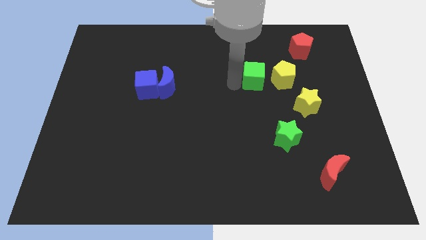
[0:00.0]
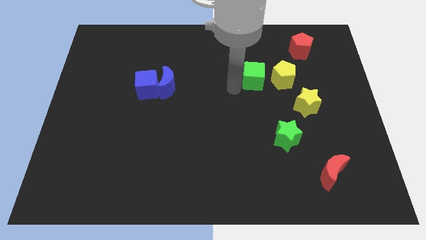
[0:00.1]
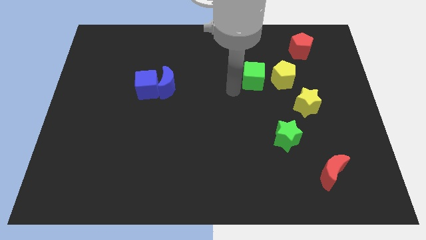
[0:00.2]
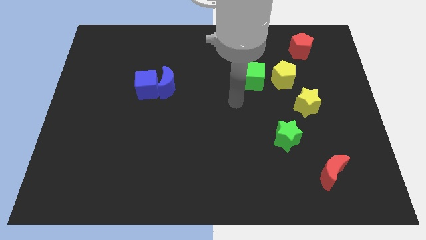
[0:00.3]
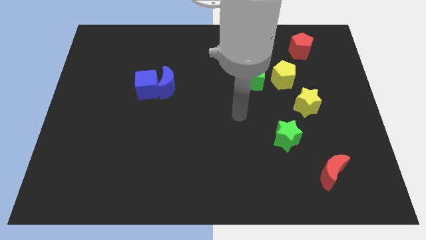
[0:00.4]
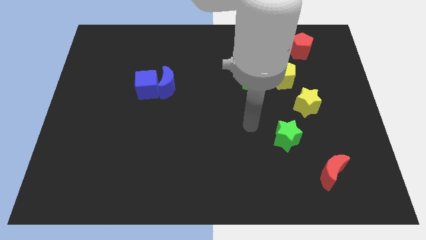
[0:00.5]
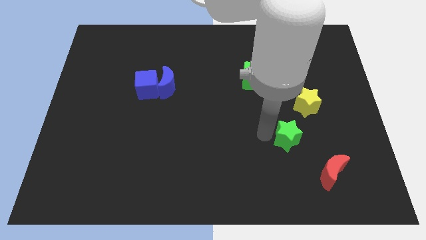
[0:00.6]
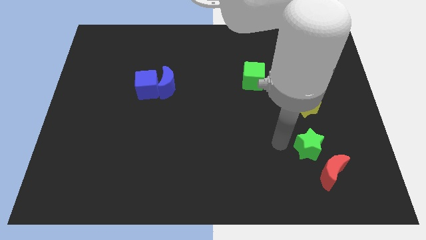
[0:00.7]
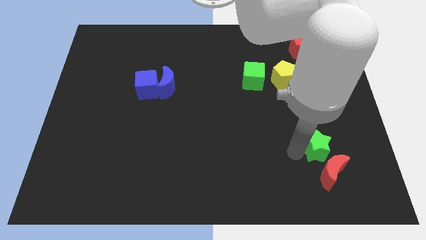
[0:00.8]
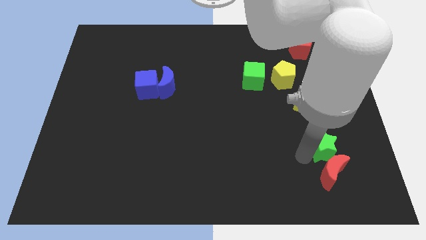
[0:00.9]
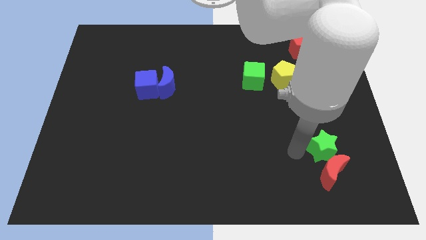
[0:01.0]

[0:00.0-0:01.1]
place the green star above the red crescent

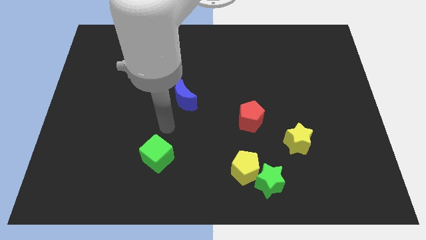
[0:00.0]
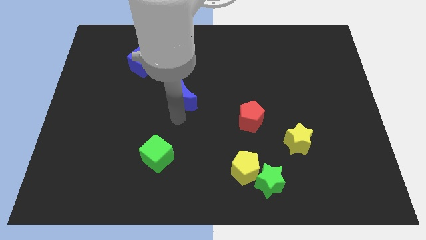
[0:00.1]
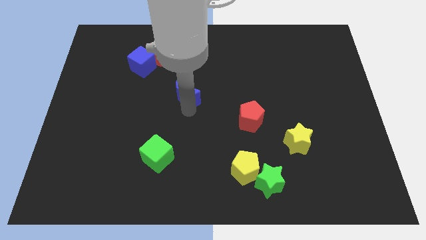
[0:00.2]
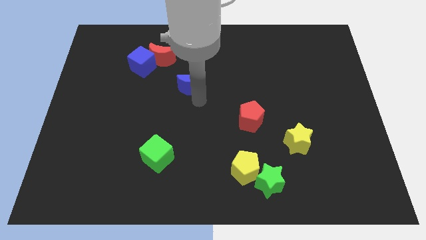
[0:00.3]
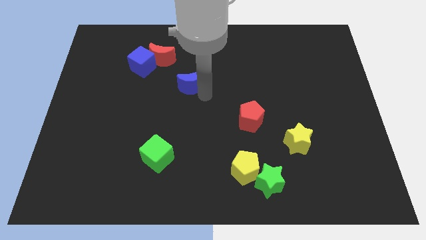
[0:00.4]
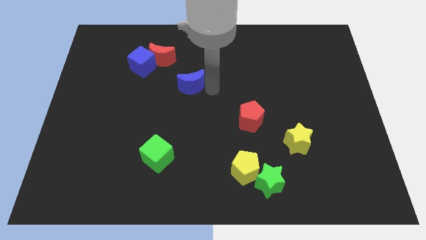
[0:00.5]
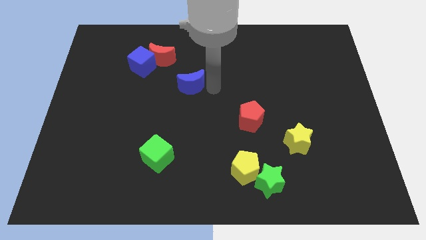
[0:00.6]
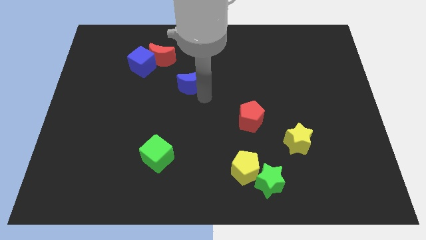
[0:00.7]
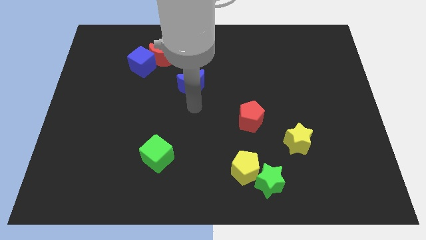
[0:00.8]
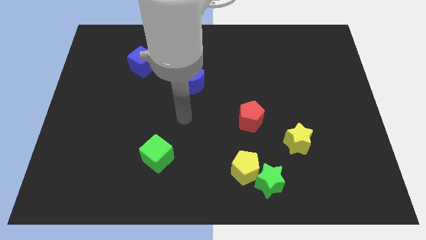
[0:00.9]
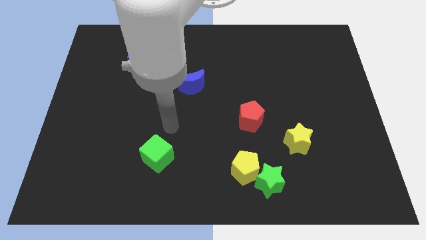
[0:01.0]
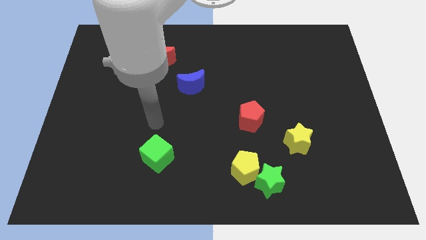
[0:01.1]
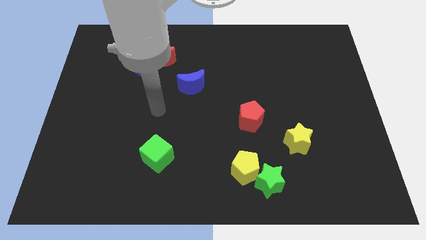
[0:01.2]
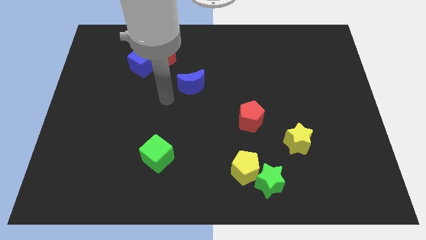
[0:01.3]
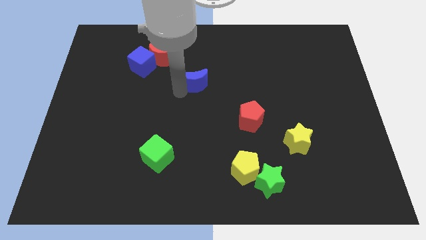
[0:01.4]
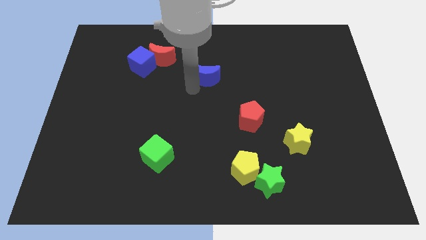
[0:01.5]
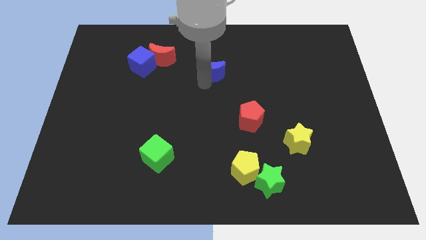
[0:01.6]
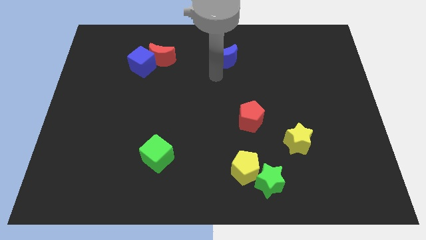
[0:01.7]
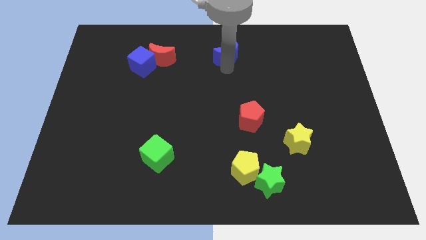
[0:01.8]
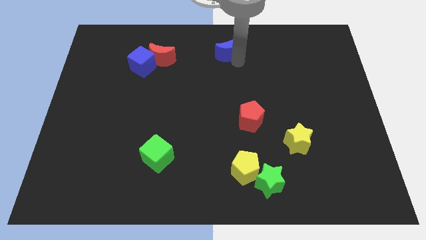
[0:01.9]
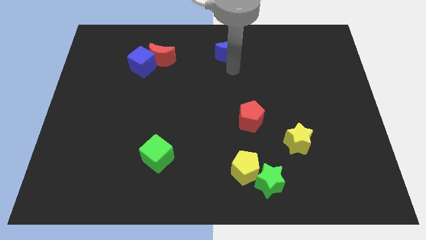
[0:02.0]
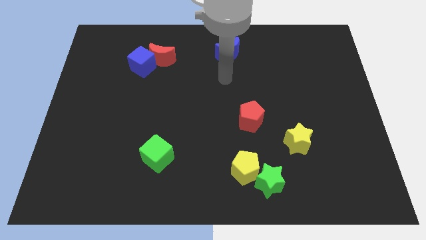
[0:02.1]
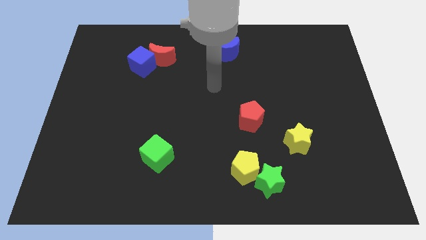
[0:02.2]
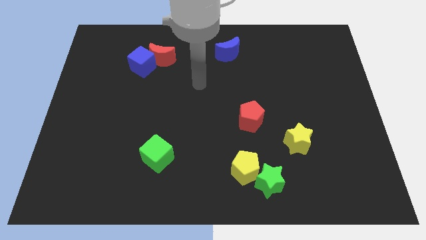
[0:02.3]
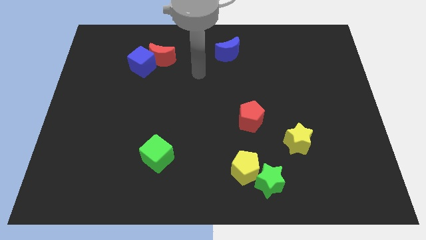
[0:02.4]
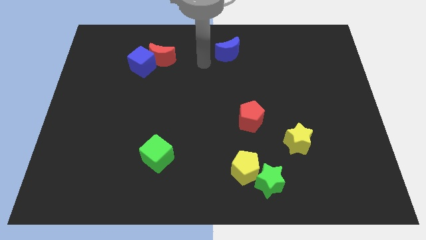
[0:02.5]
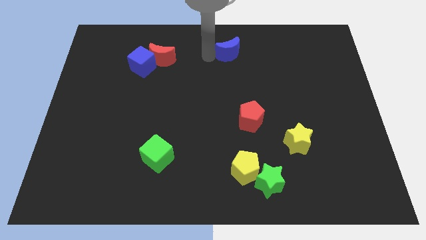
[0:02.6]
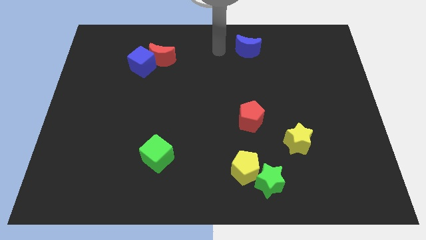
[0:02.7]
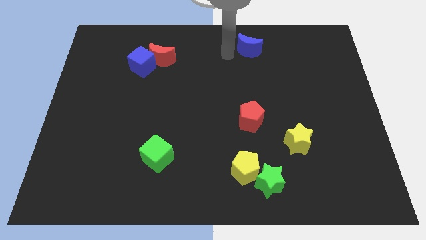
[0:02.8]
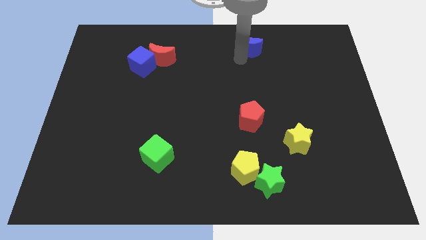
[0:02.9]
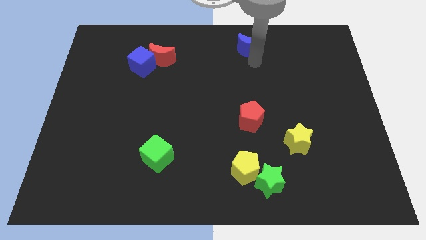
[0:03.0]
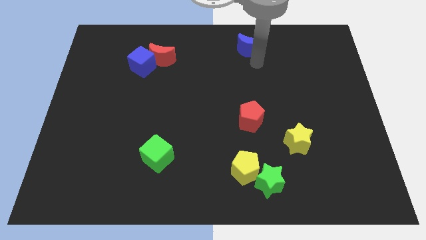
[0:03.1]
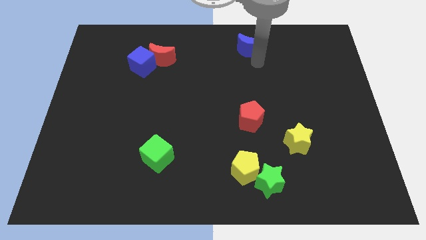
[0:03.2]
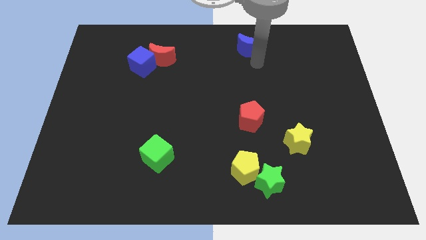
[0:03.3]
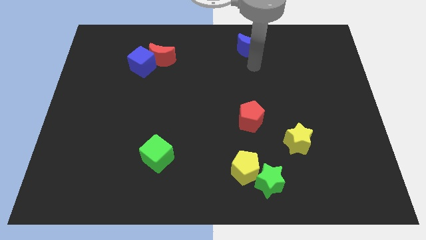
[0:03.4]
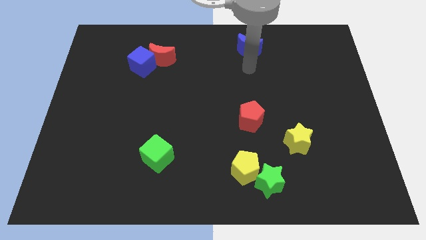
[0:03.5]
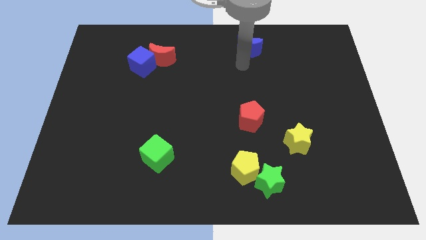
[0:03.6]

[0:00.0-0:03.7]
move the blue moon vertically above the red pentagon

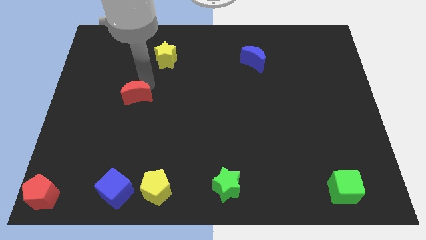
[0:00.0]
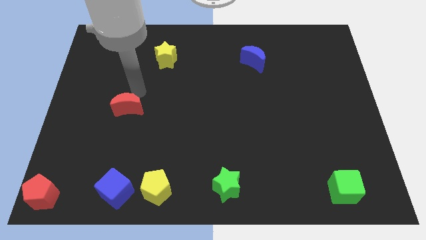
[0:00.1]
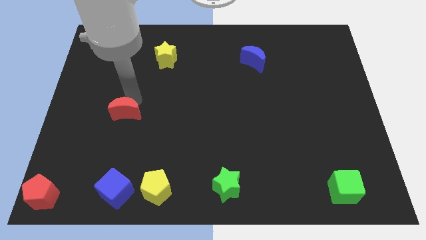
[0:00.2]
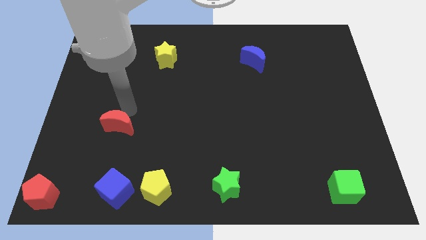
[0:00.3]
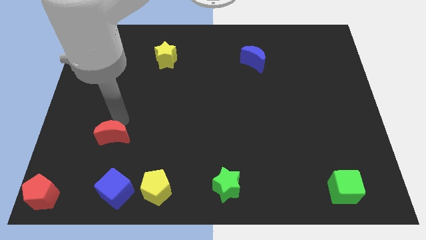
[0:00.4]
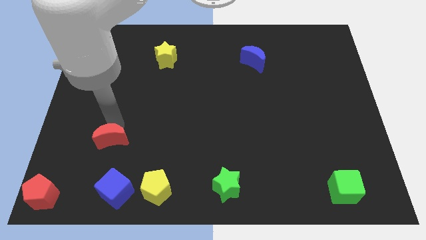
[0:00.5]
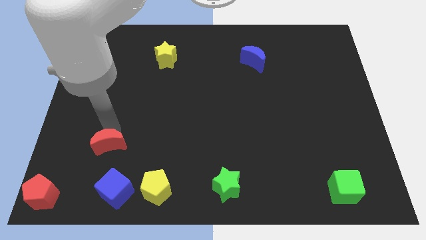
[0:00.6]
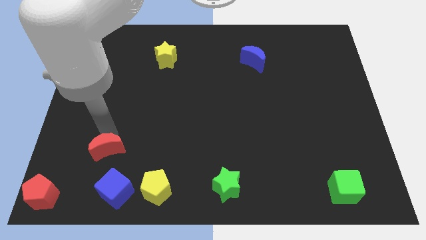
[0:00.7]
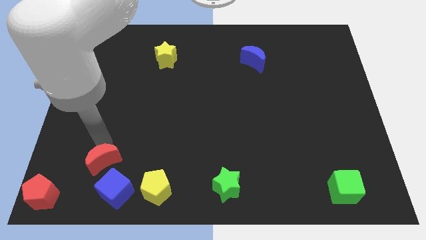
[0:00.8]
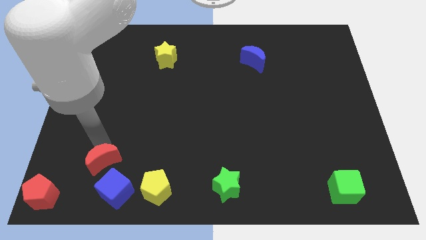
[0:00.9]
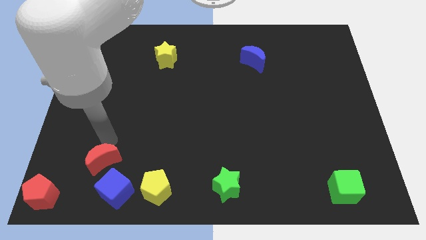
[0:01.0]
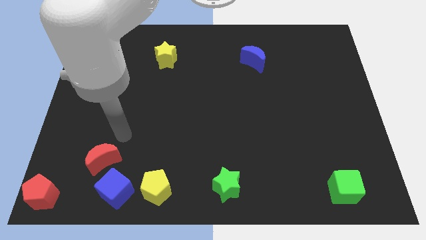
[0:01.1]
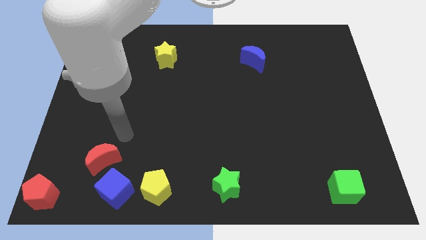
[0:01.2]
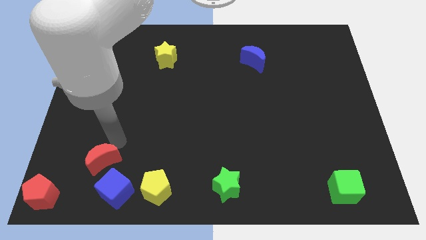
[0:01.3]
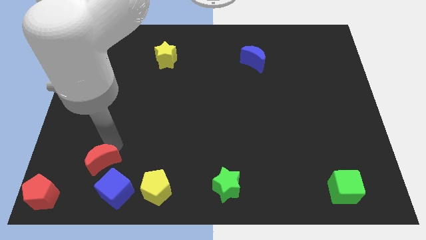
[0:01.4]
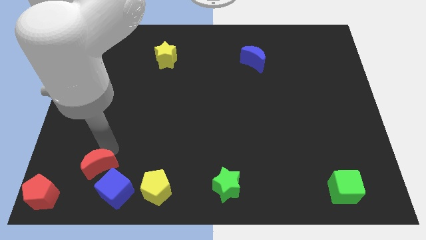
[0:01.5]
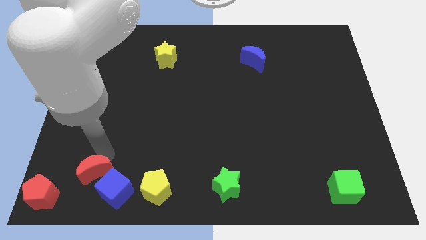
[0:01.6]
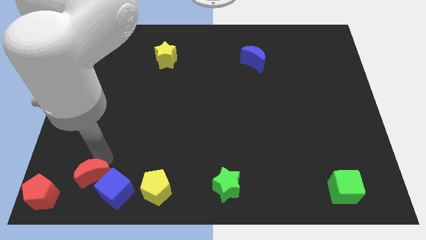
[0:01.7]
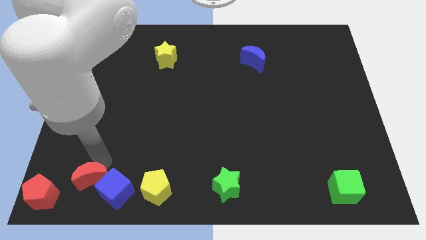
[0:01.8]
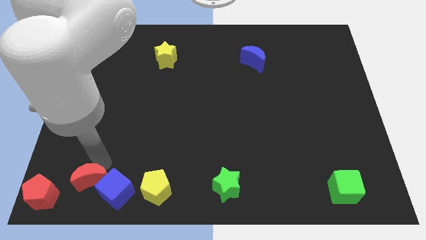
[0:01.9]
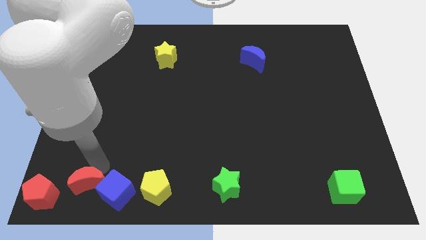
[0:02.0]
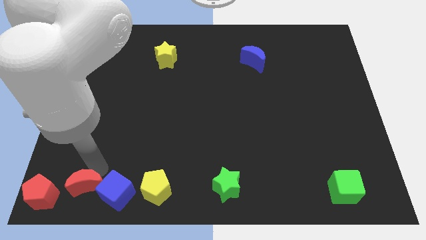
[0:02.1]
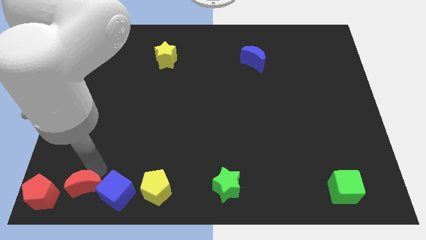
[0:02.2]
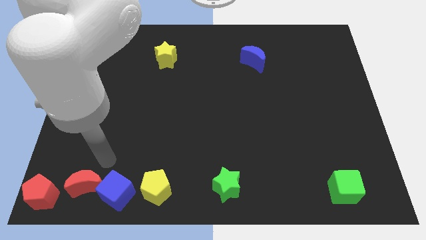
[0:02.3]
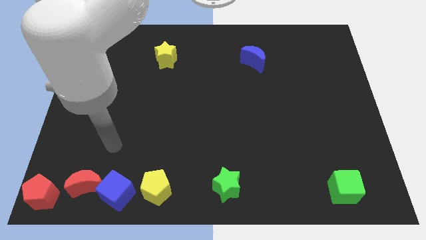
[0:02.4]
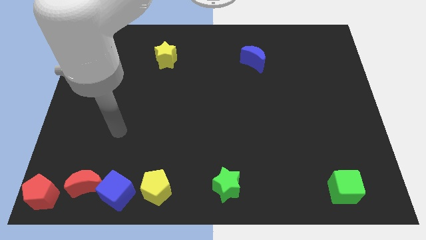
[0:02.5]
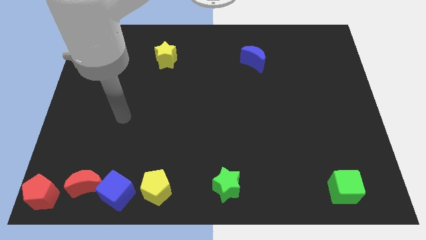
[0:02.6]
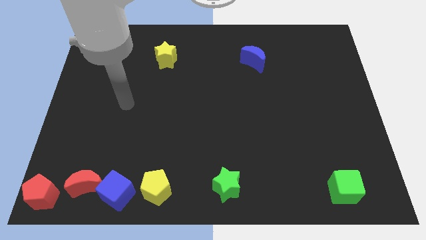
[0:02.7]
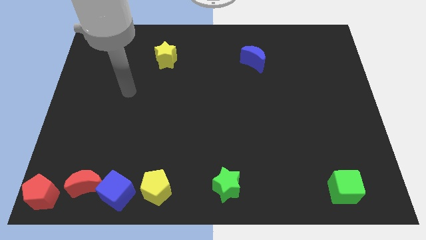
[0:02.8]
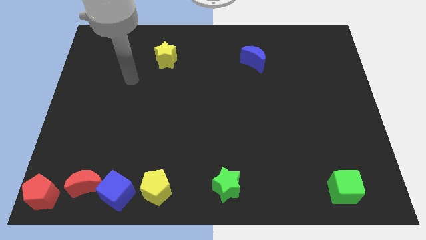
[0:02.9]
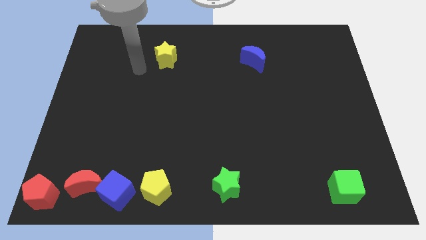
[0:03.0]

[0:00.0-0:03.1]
place the red crescent in between the red pentagon and the blue cube

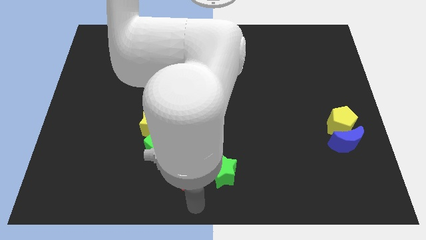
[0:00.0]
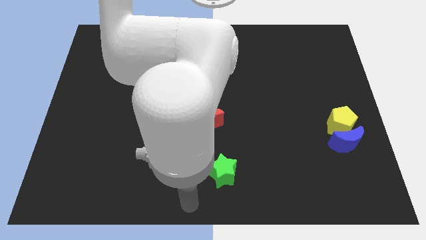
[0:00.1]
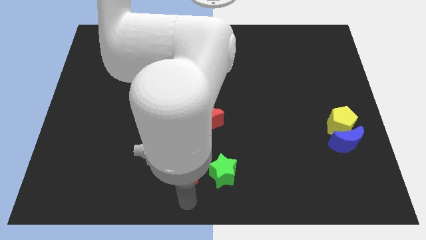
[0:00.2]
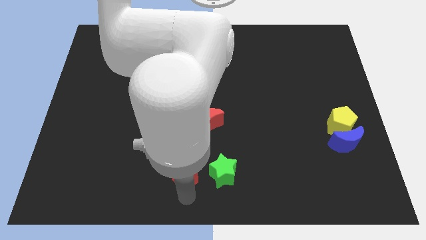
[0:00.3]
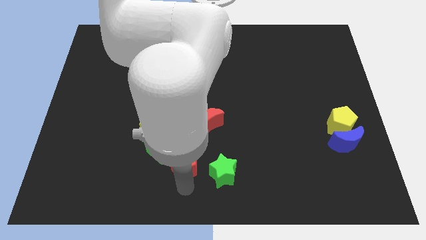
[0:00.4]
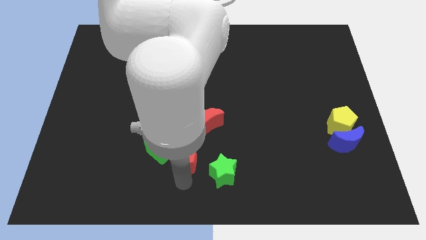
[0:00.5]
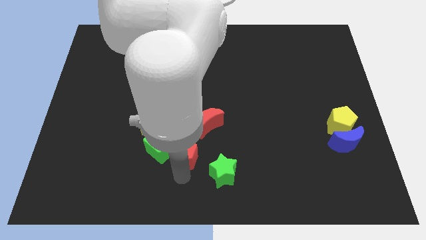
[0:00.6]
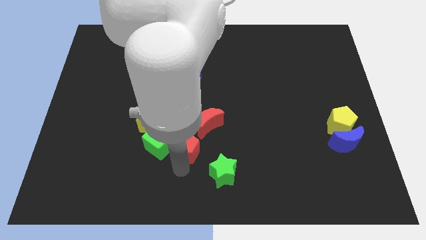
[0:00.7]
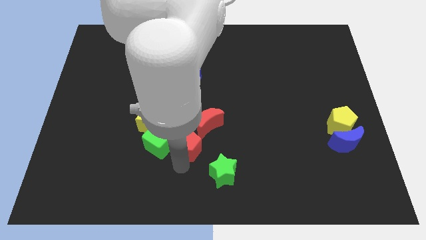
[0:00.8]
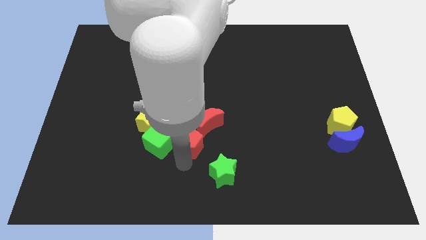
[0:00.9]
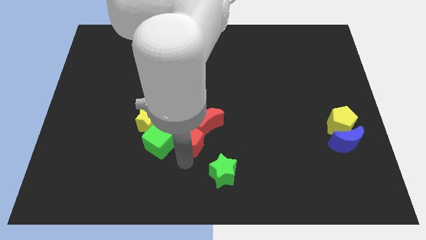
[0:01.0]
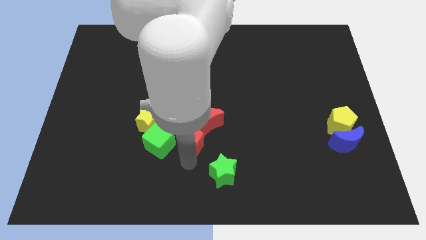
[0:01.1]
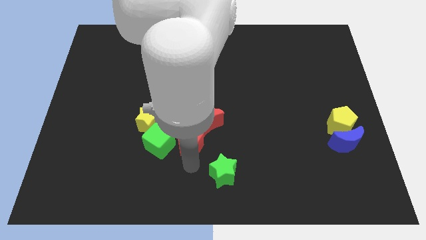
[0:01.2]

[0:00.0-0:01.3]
move the red pentagon at the bottom of red crescent
